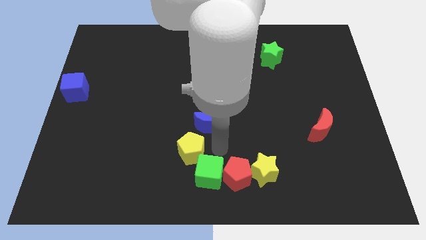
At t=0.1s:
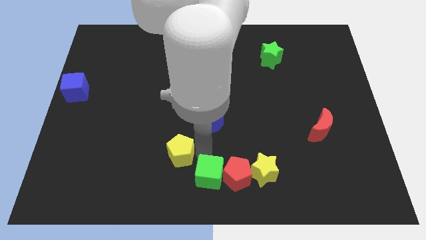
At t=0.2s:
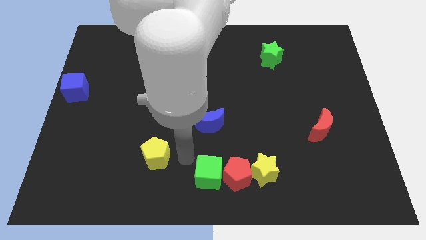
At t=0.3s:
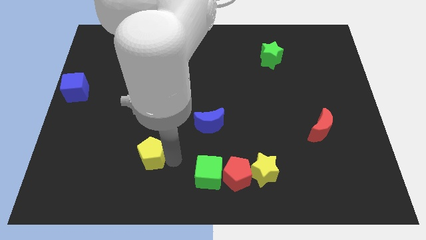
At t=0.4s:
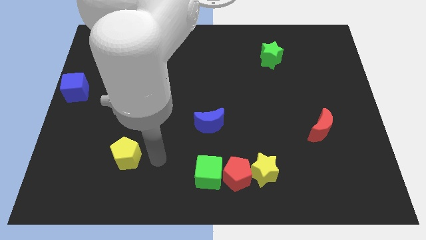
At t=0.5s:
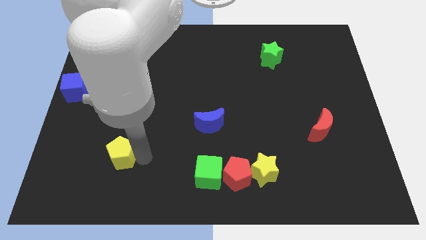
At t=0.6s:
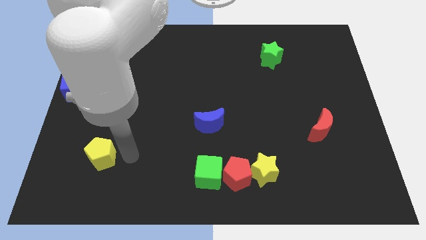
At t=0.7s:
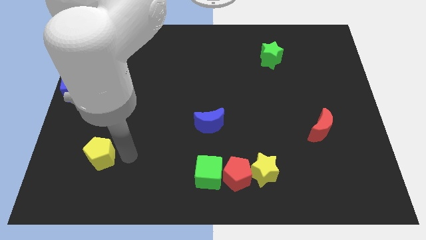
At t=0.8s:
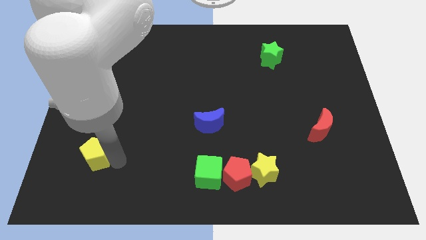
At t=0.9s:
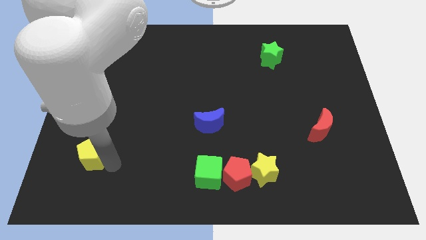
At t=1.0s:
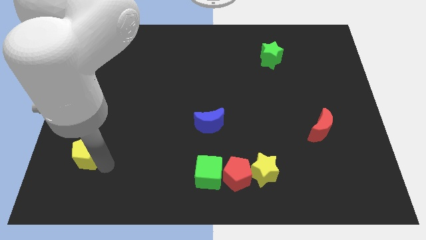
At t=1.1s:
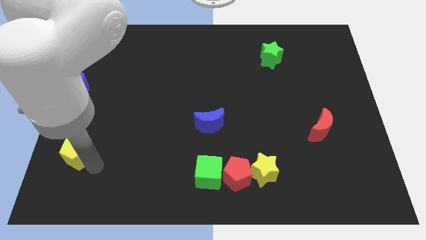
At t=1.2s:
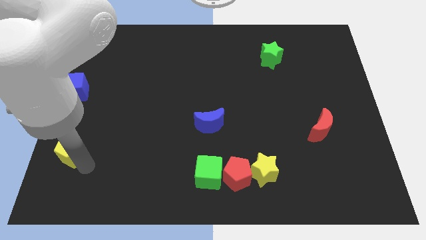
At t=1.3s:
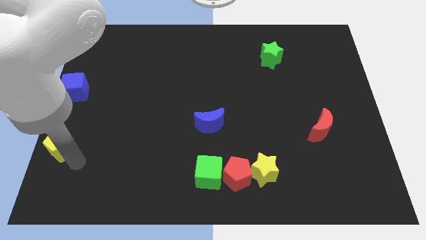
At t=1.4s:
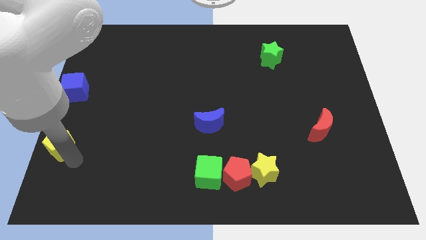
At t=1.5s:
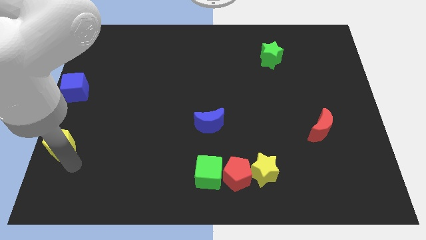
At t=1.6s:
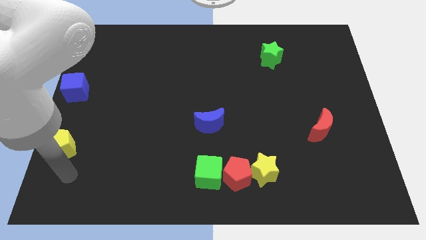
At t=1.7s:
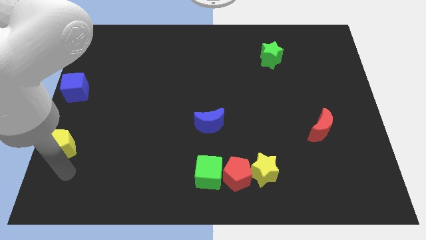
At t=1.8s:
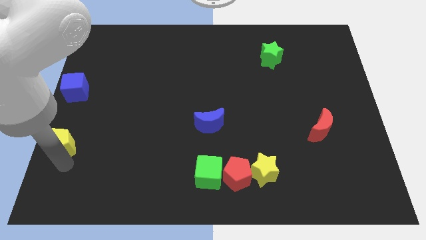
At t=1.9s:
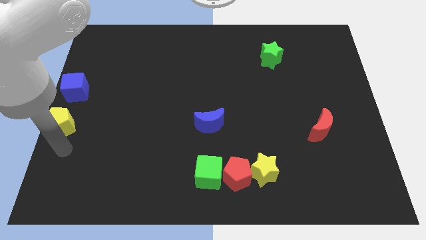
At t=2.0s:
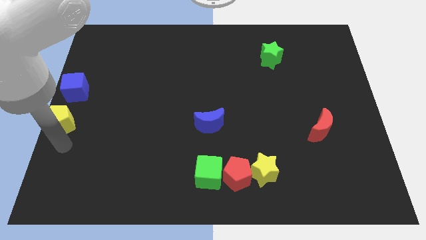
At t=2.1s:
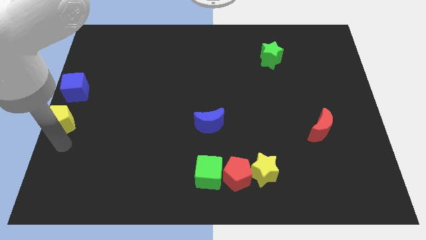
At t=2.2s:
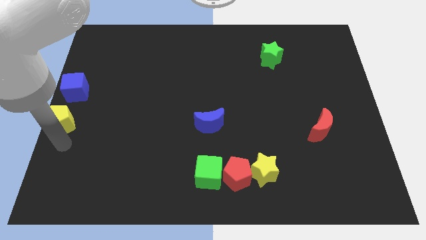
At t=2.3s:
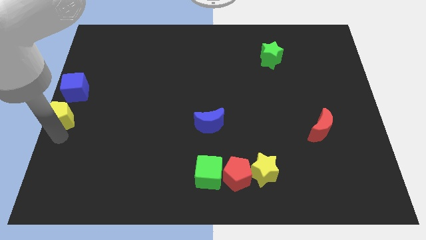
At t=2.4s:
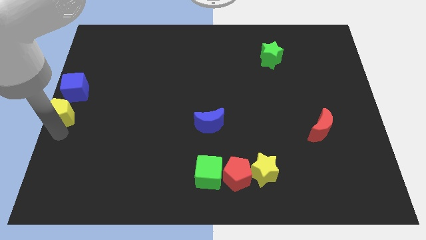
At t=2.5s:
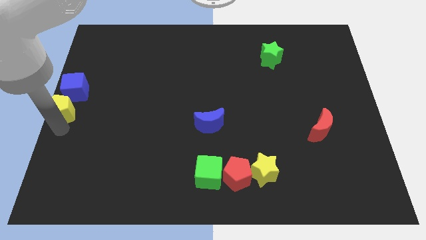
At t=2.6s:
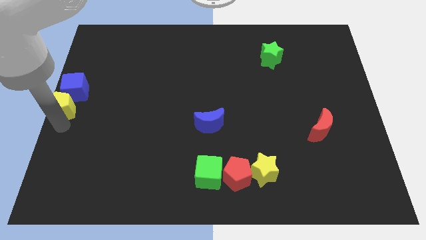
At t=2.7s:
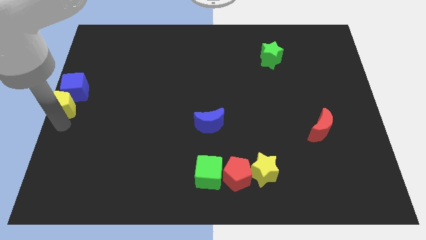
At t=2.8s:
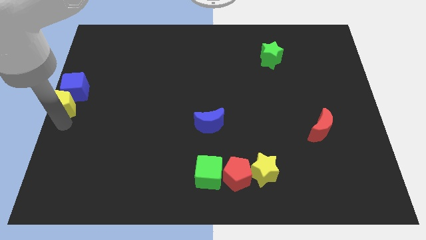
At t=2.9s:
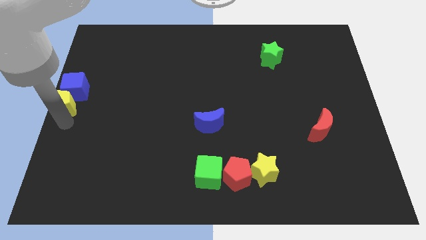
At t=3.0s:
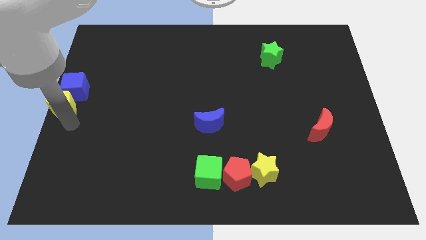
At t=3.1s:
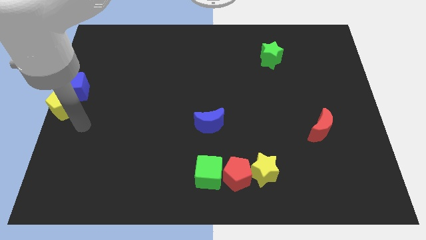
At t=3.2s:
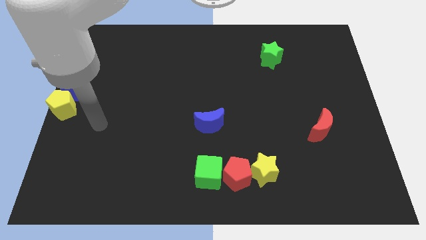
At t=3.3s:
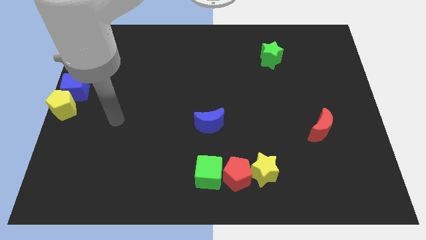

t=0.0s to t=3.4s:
place yellow pentagon to the bottom of the blue cube

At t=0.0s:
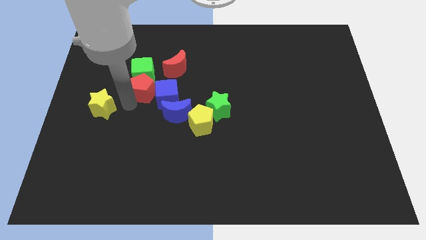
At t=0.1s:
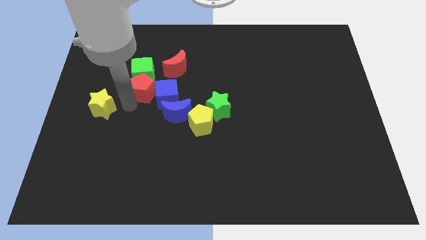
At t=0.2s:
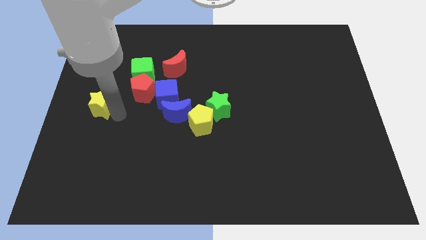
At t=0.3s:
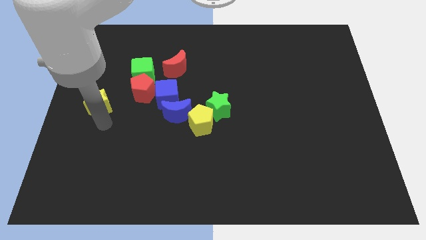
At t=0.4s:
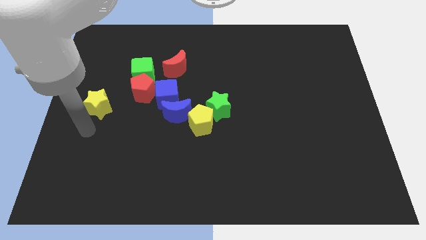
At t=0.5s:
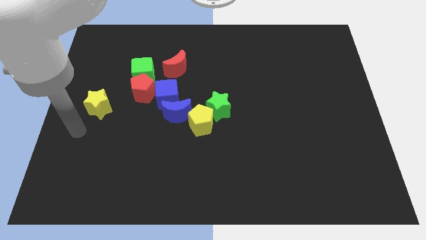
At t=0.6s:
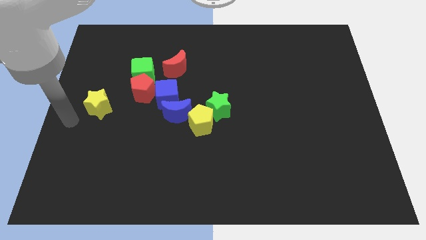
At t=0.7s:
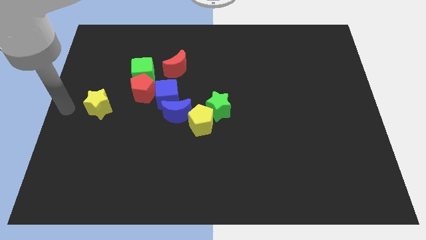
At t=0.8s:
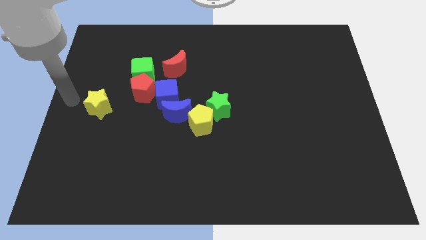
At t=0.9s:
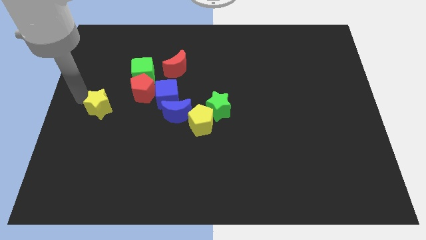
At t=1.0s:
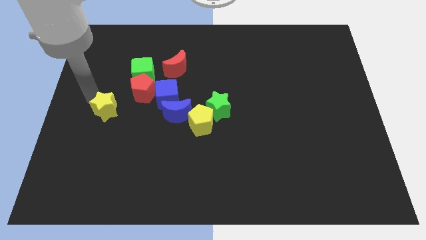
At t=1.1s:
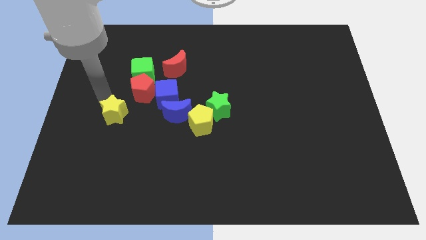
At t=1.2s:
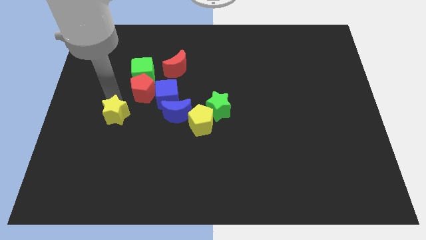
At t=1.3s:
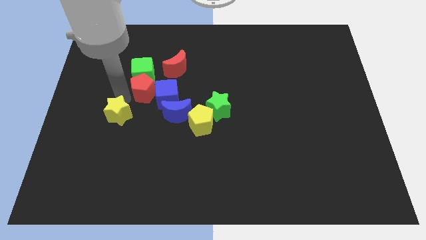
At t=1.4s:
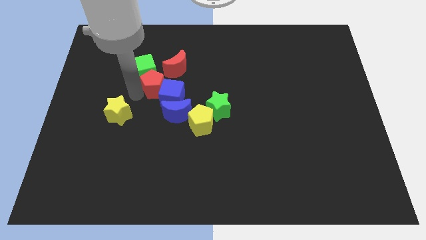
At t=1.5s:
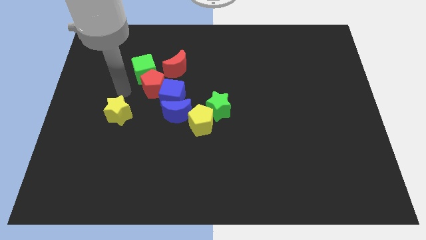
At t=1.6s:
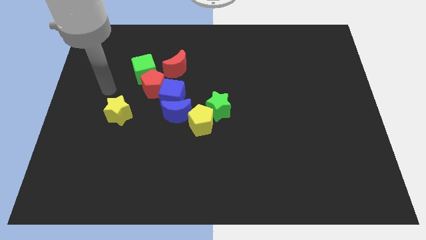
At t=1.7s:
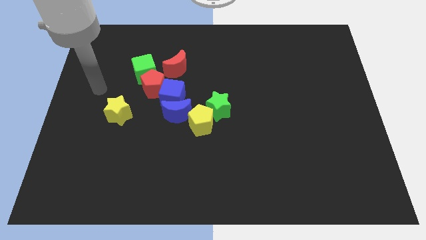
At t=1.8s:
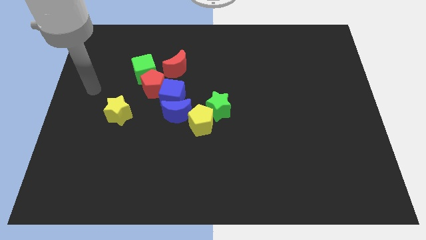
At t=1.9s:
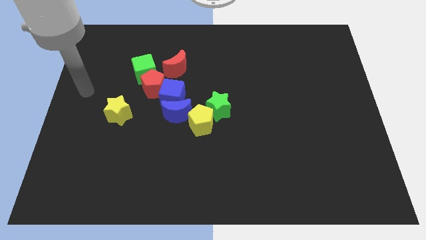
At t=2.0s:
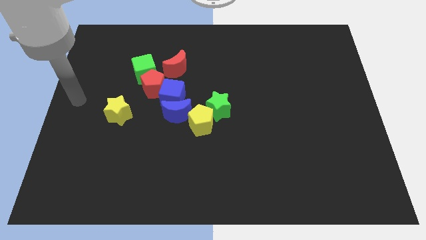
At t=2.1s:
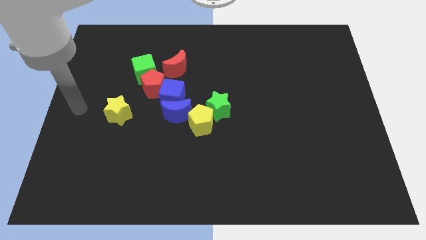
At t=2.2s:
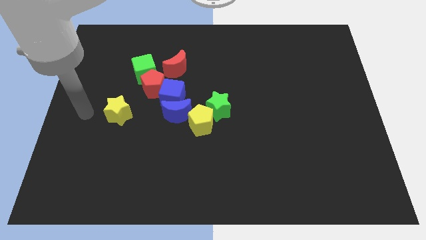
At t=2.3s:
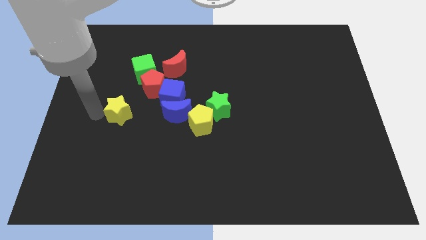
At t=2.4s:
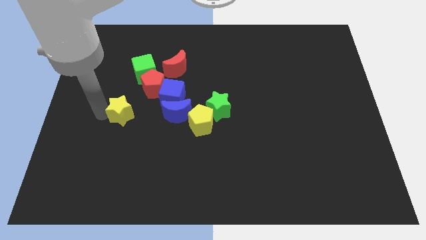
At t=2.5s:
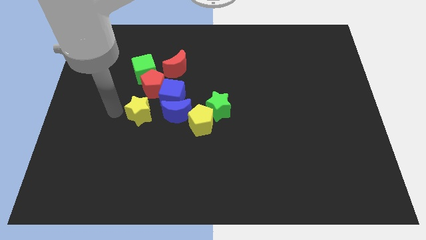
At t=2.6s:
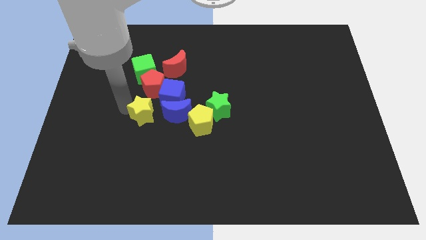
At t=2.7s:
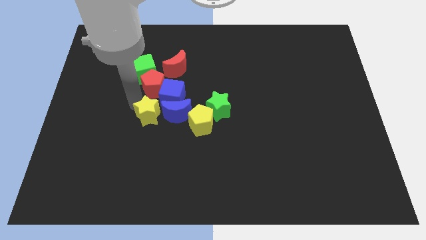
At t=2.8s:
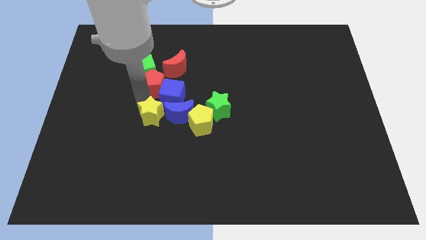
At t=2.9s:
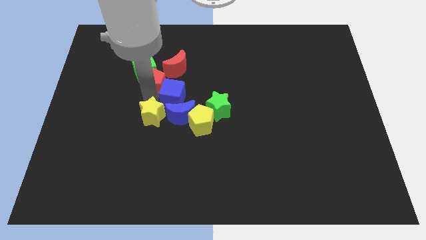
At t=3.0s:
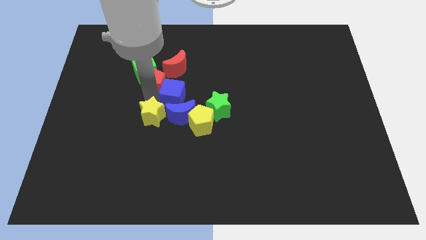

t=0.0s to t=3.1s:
move the yellow star to the left of the blue crescent

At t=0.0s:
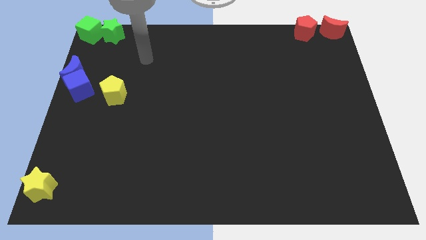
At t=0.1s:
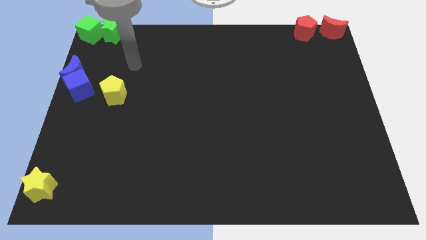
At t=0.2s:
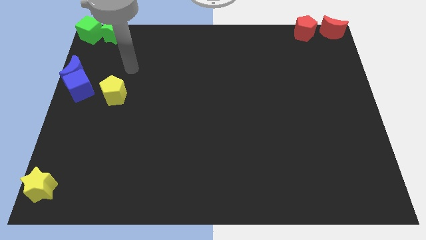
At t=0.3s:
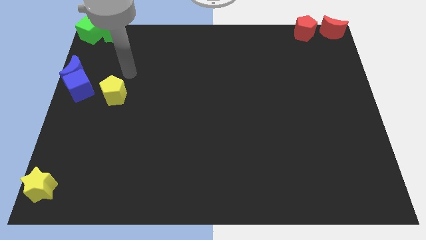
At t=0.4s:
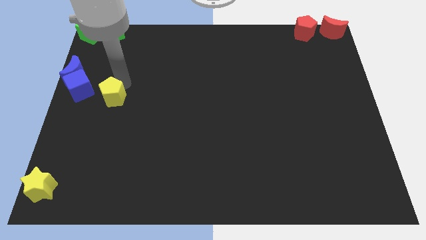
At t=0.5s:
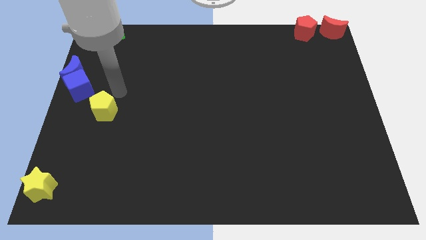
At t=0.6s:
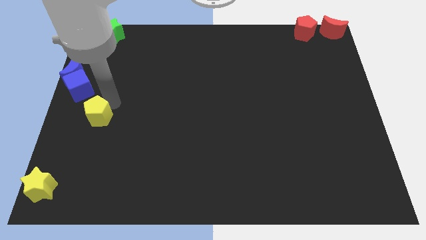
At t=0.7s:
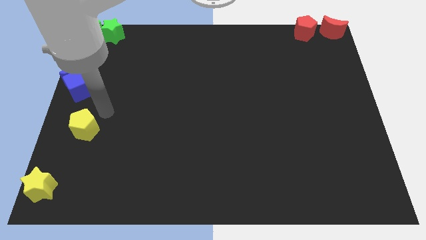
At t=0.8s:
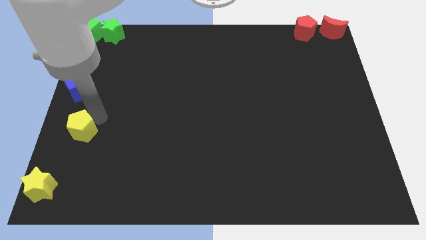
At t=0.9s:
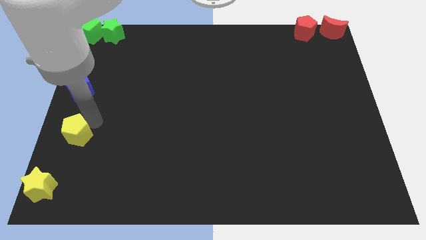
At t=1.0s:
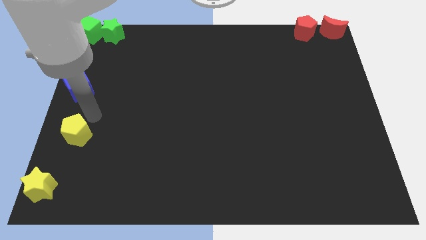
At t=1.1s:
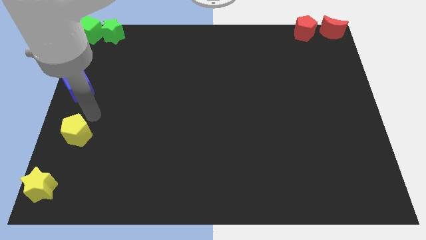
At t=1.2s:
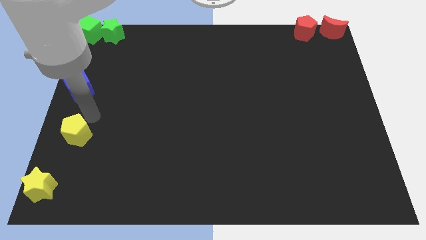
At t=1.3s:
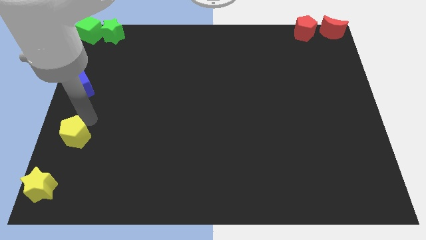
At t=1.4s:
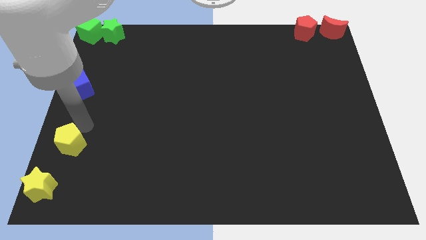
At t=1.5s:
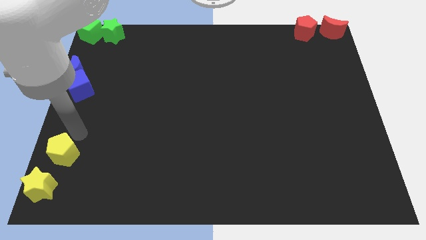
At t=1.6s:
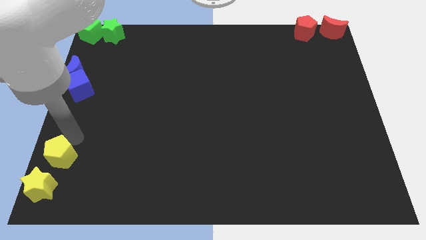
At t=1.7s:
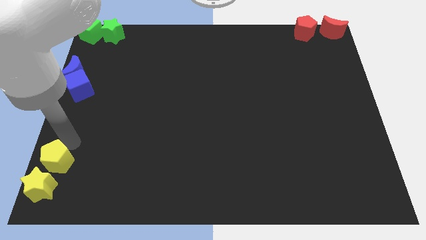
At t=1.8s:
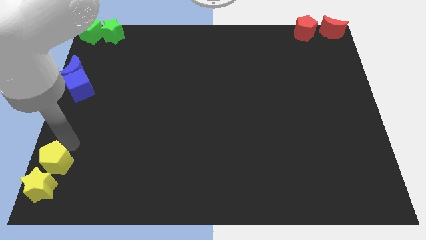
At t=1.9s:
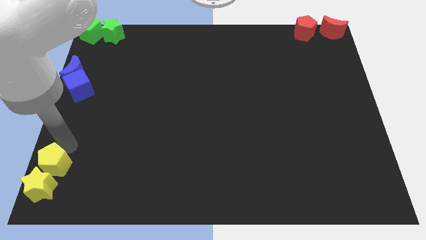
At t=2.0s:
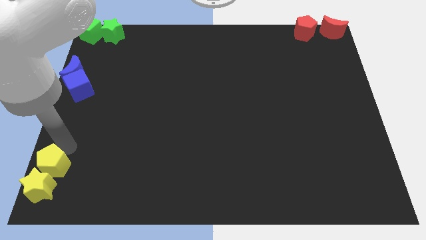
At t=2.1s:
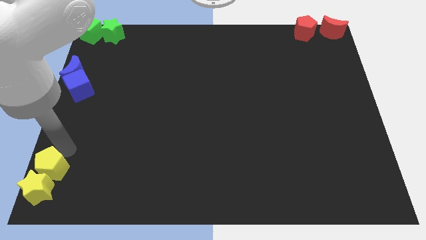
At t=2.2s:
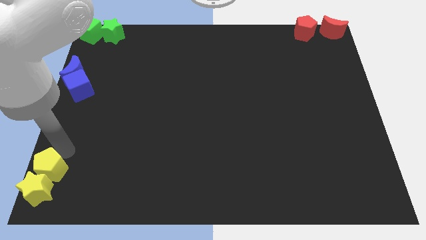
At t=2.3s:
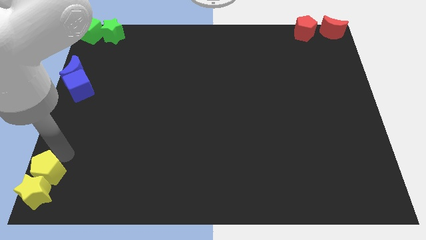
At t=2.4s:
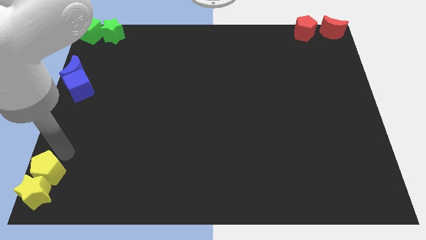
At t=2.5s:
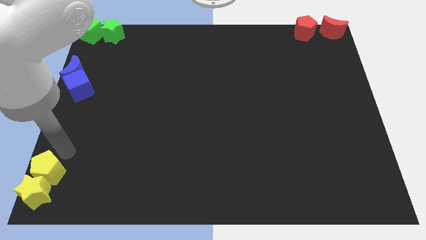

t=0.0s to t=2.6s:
put the yellow pentagon into the yellow star
